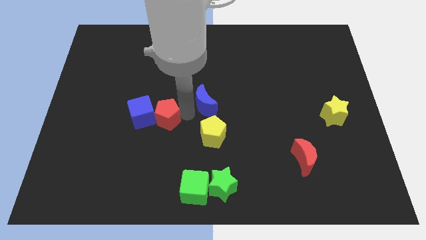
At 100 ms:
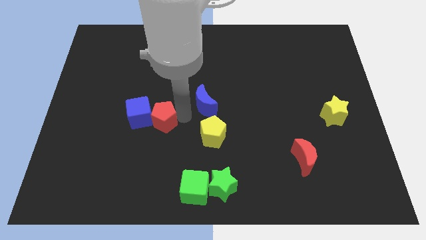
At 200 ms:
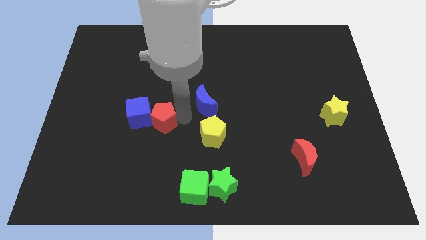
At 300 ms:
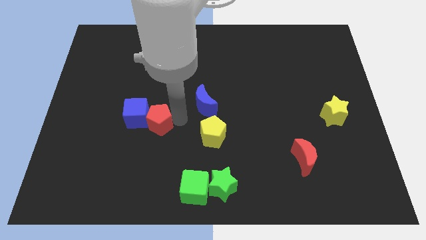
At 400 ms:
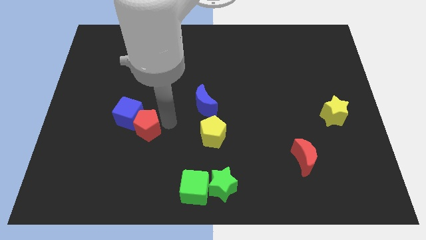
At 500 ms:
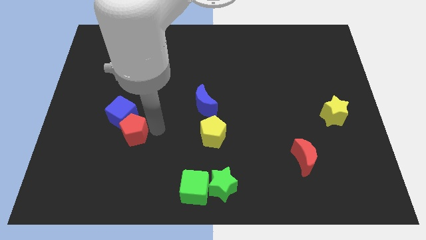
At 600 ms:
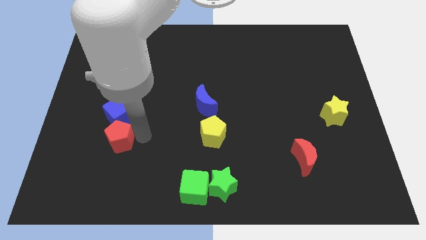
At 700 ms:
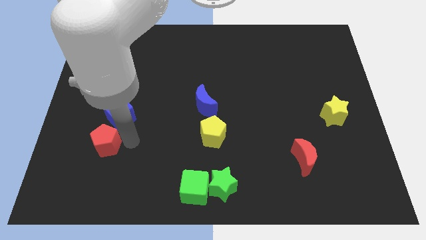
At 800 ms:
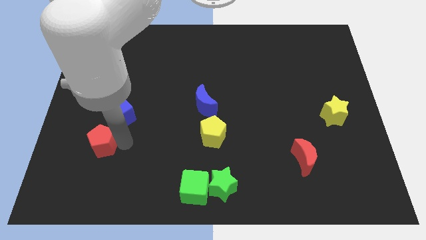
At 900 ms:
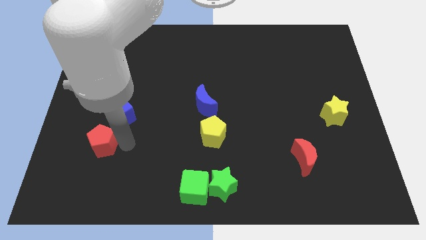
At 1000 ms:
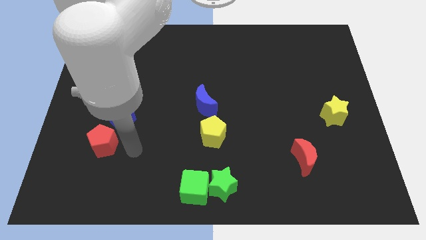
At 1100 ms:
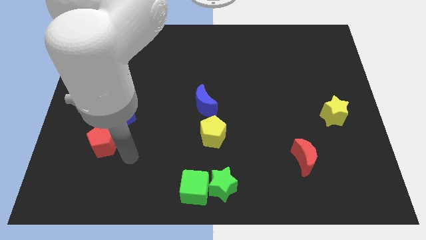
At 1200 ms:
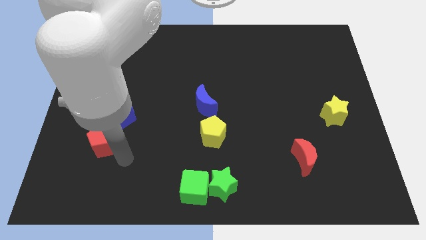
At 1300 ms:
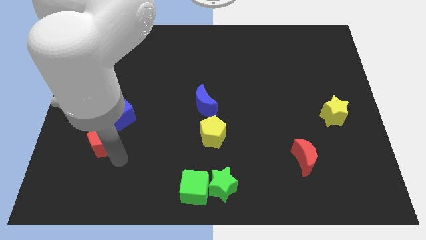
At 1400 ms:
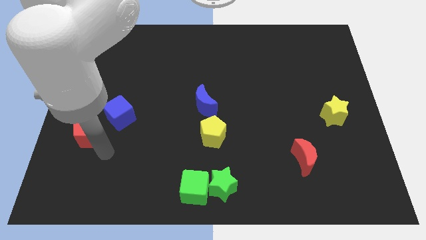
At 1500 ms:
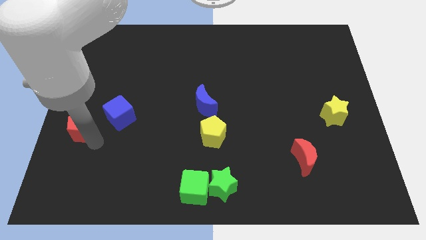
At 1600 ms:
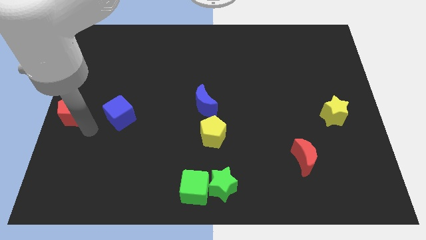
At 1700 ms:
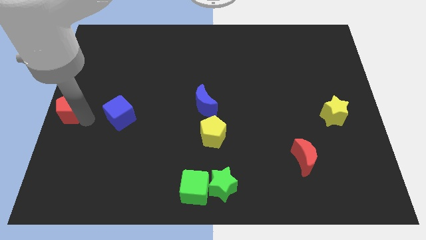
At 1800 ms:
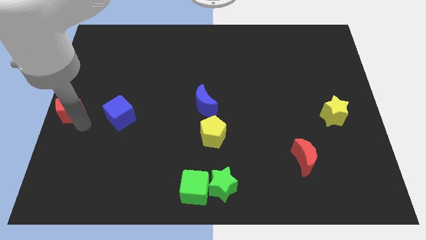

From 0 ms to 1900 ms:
place the red pentagon to the left side of the blue cube

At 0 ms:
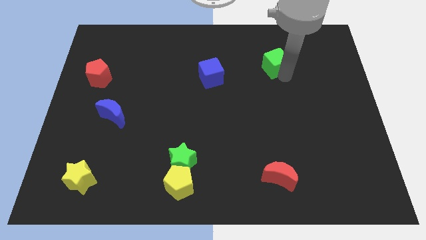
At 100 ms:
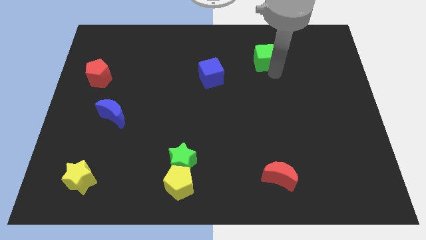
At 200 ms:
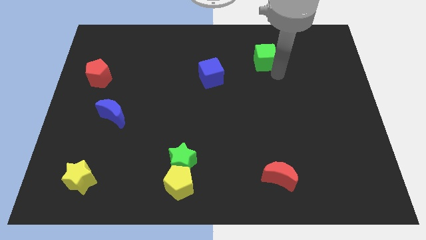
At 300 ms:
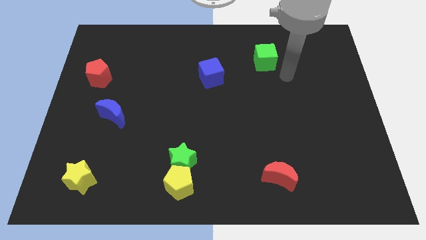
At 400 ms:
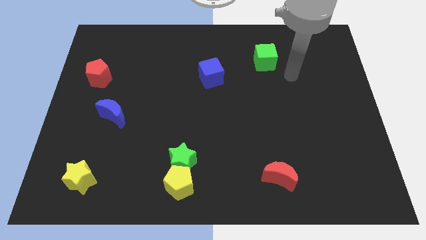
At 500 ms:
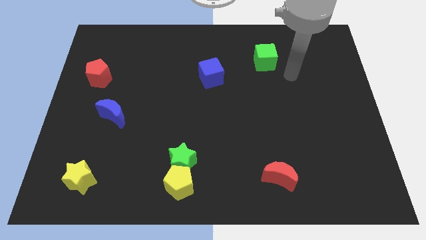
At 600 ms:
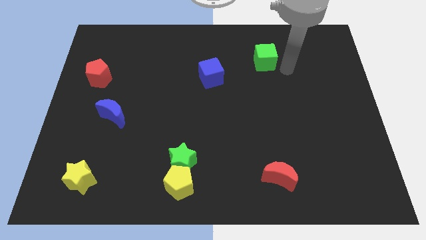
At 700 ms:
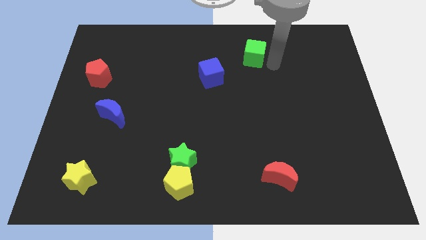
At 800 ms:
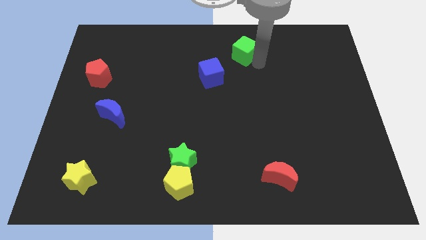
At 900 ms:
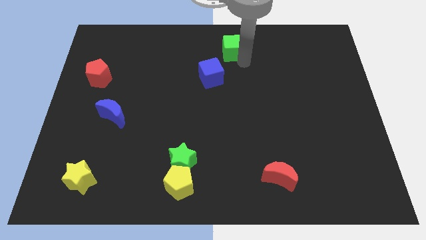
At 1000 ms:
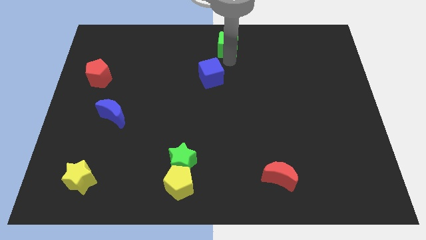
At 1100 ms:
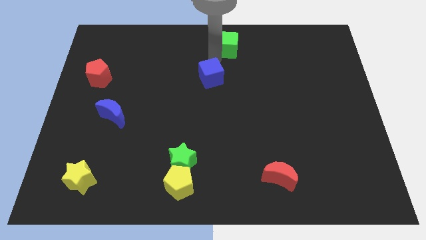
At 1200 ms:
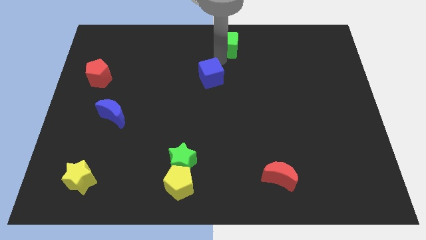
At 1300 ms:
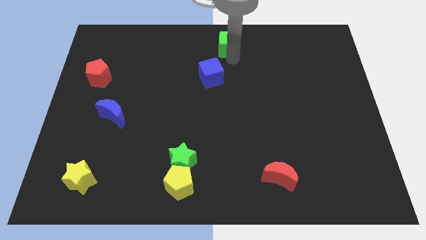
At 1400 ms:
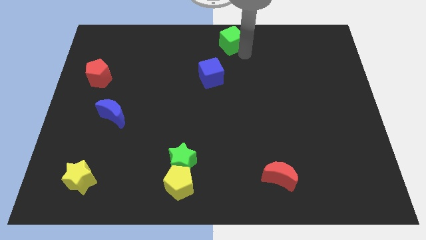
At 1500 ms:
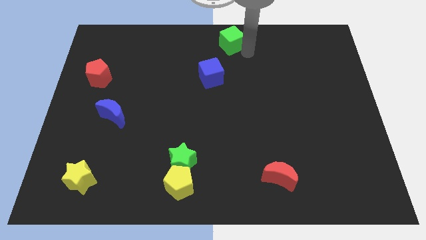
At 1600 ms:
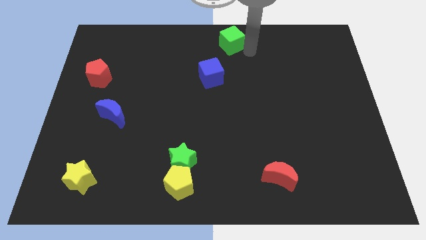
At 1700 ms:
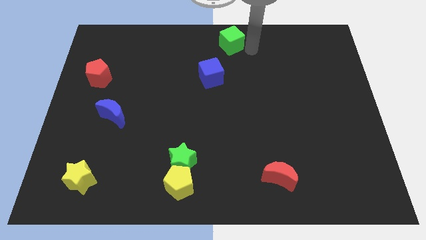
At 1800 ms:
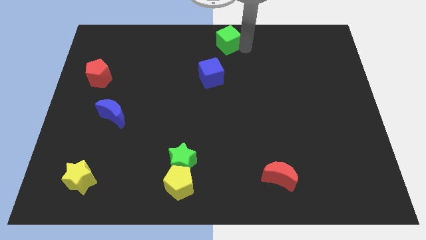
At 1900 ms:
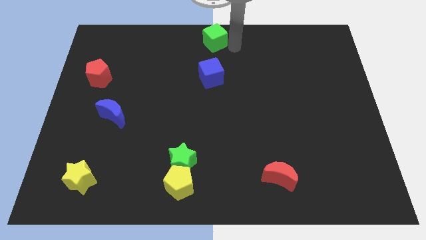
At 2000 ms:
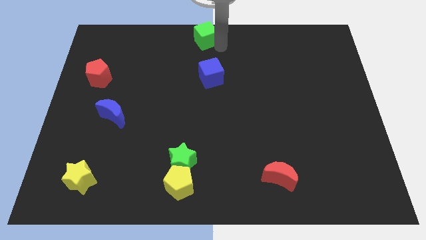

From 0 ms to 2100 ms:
push the green cube to the top center of the board

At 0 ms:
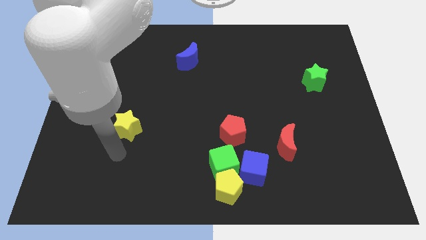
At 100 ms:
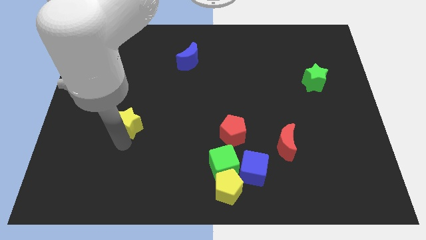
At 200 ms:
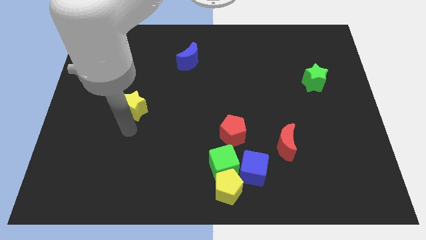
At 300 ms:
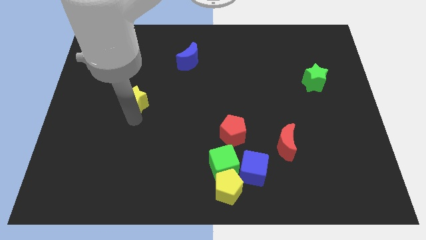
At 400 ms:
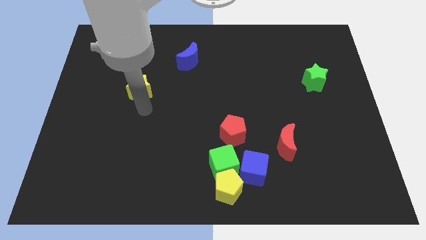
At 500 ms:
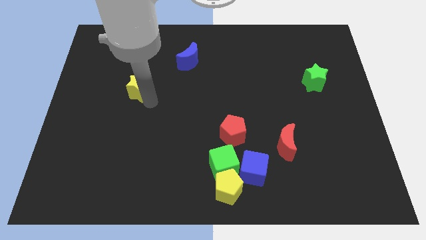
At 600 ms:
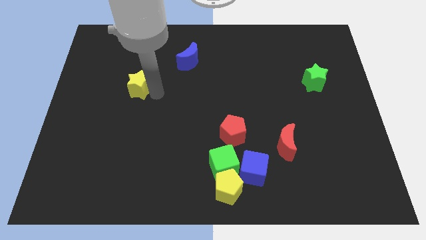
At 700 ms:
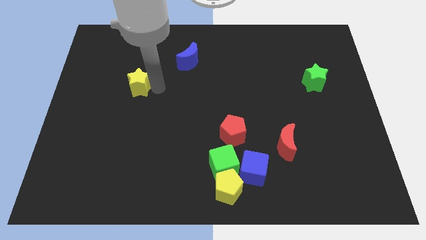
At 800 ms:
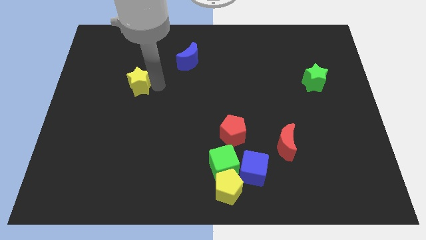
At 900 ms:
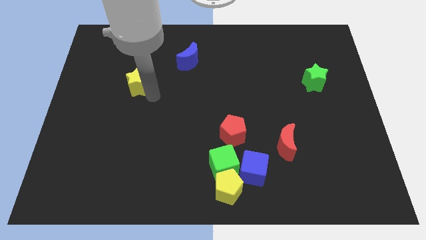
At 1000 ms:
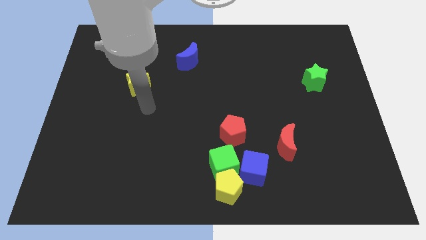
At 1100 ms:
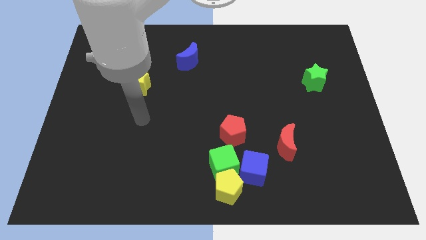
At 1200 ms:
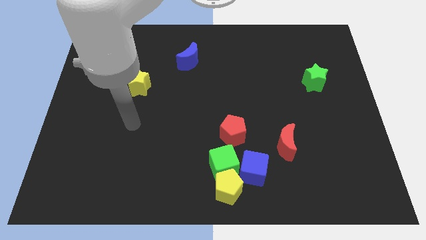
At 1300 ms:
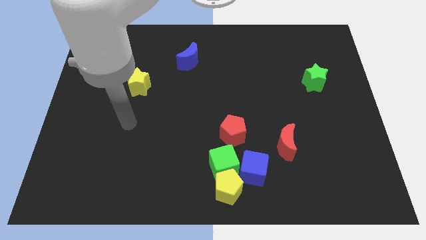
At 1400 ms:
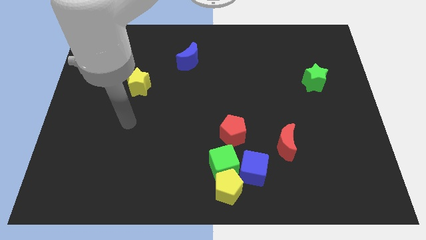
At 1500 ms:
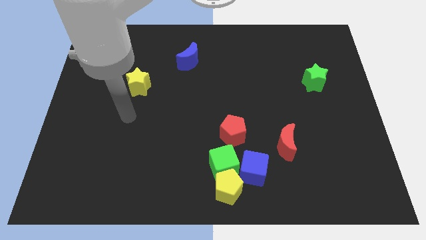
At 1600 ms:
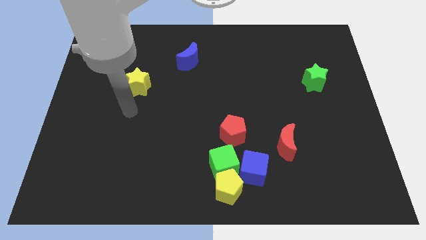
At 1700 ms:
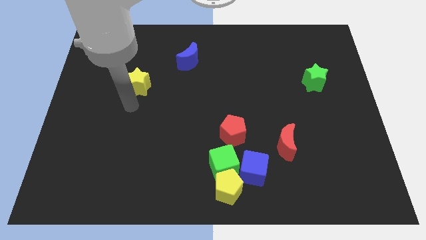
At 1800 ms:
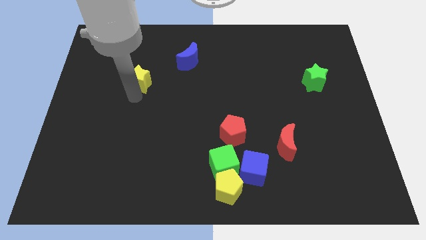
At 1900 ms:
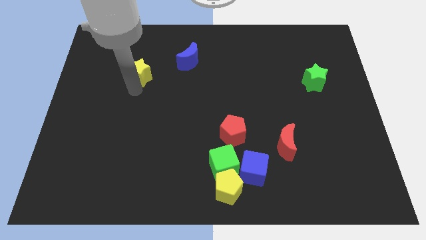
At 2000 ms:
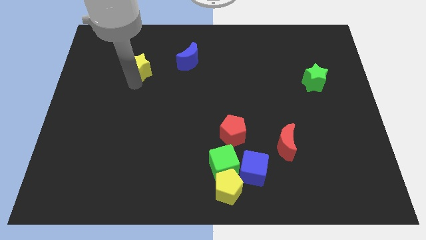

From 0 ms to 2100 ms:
move yellow star to the left of blue moon

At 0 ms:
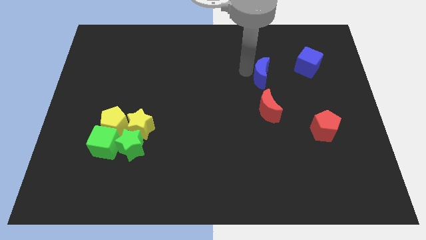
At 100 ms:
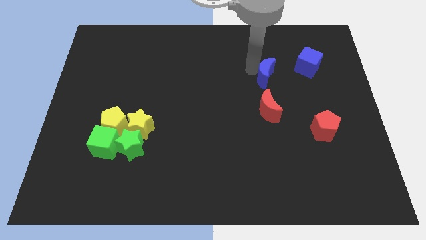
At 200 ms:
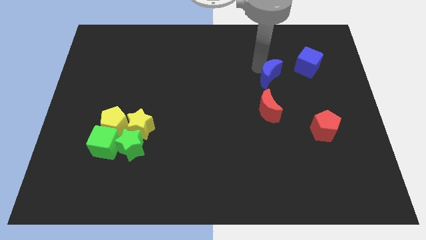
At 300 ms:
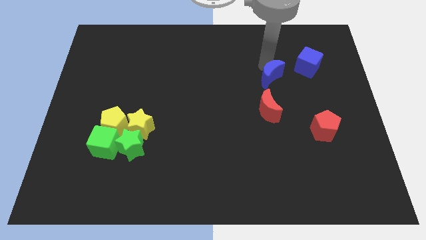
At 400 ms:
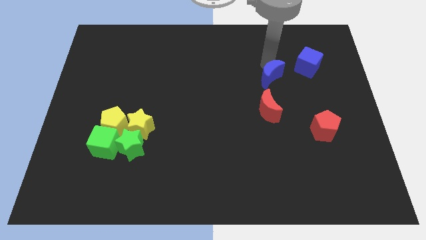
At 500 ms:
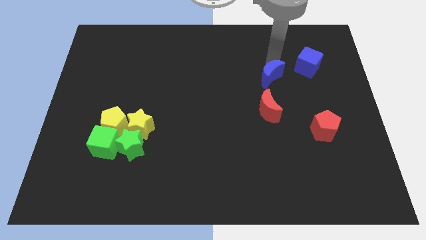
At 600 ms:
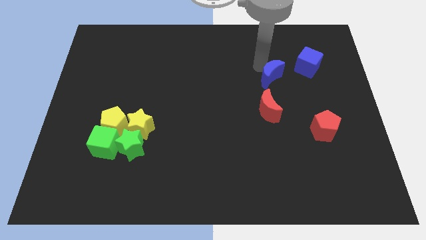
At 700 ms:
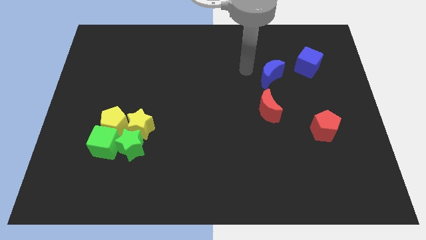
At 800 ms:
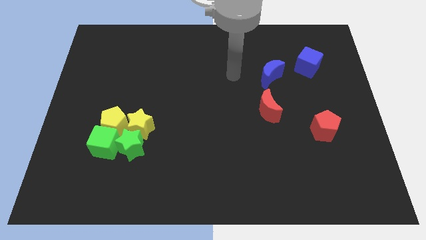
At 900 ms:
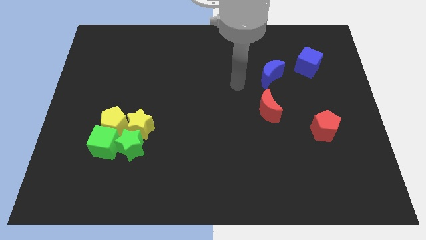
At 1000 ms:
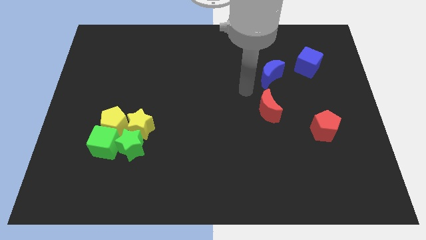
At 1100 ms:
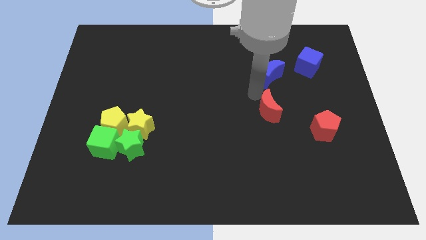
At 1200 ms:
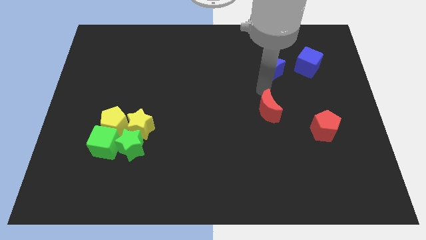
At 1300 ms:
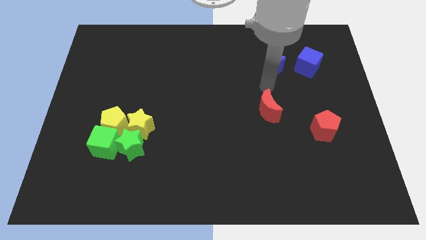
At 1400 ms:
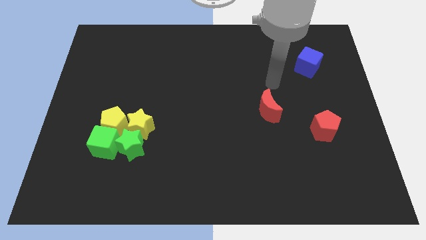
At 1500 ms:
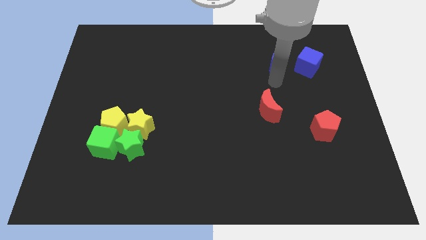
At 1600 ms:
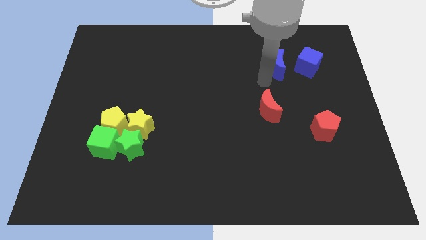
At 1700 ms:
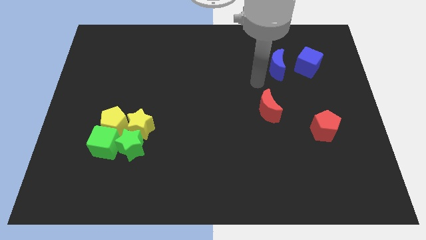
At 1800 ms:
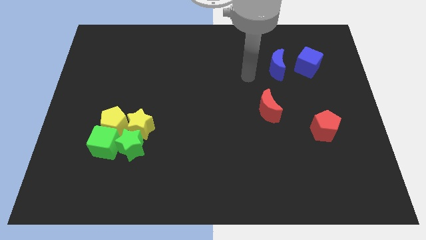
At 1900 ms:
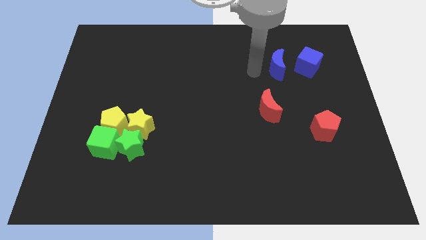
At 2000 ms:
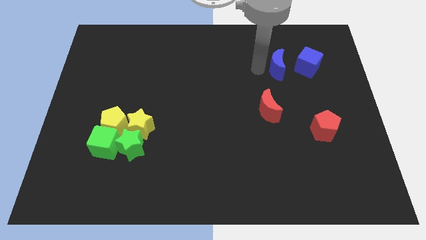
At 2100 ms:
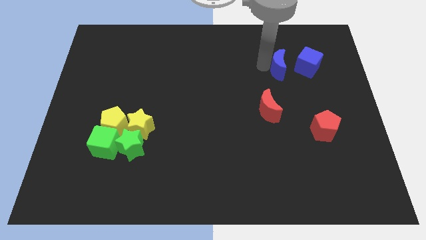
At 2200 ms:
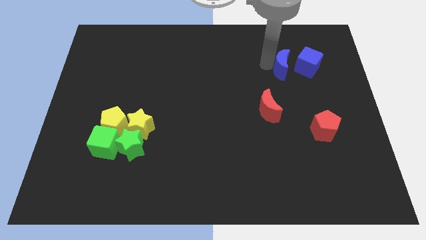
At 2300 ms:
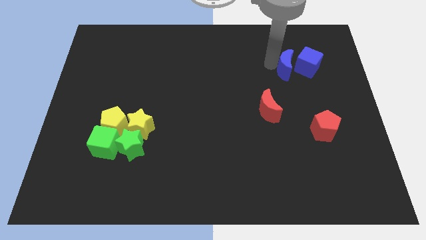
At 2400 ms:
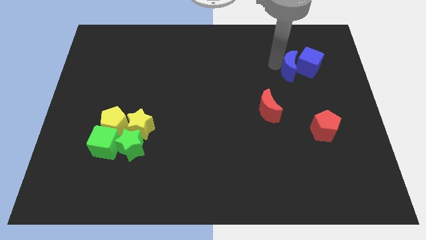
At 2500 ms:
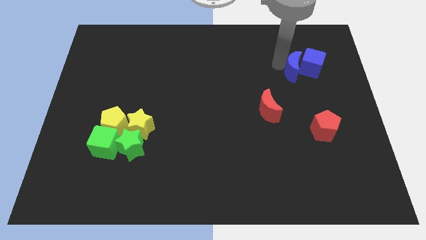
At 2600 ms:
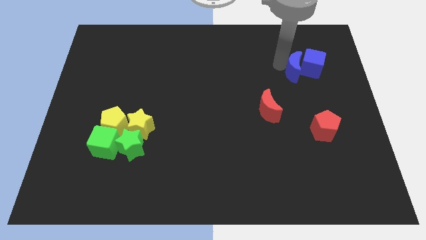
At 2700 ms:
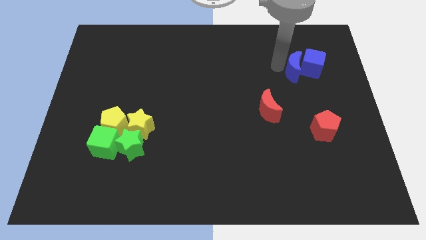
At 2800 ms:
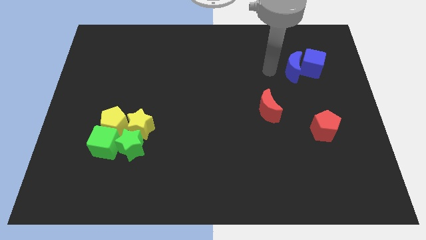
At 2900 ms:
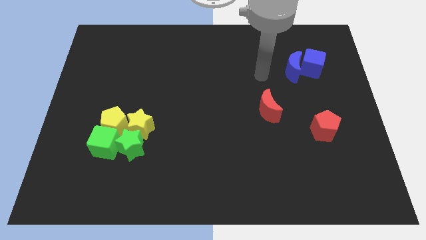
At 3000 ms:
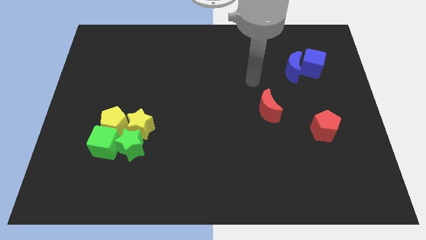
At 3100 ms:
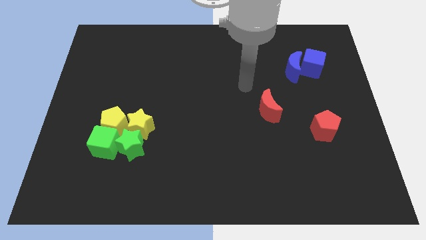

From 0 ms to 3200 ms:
move the blue crescent into the blue cube
